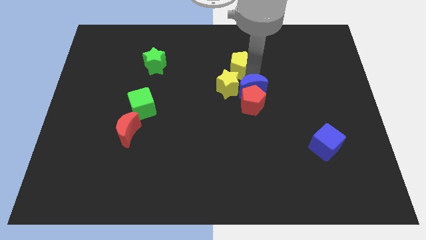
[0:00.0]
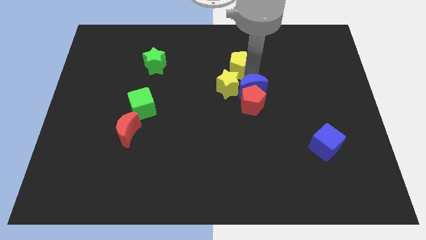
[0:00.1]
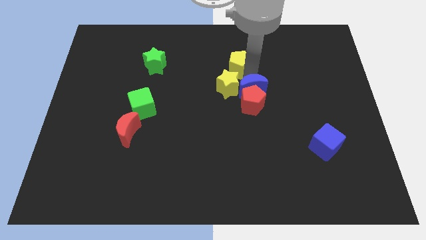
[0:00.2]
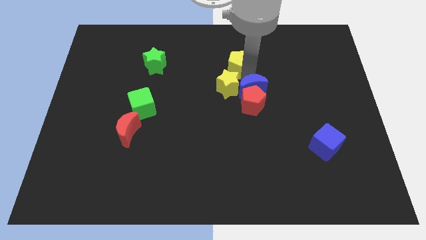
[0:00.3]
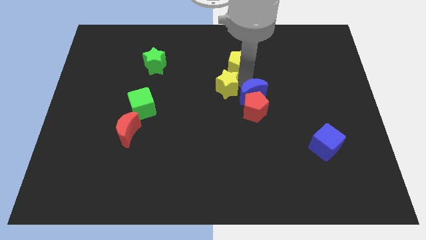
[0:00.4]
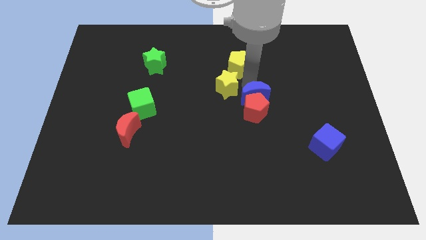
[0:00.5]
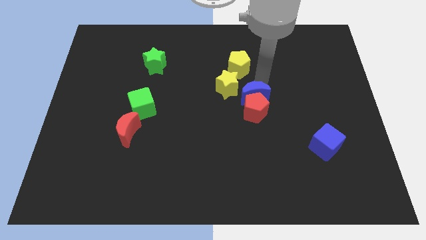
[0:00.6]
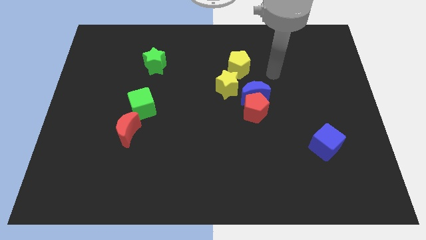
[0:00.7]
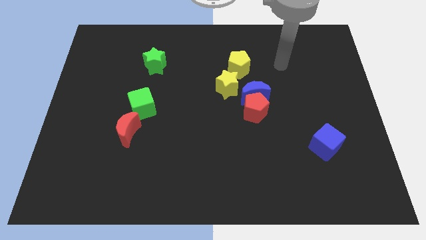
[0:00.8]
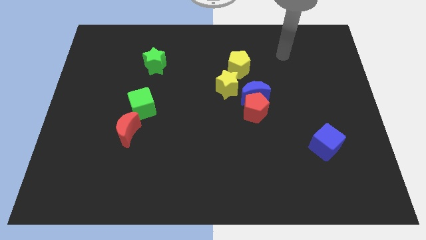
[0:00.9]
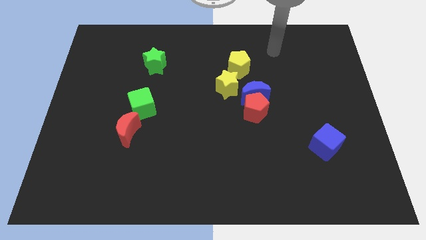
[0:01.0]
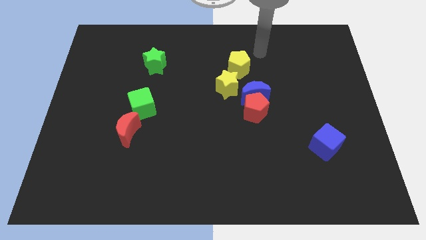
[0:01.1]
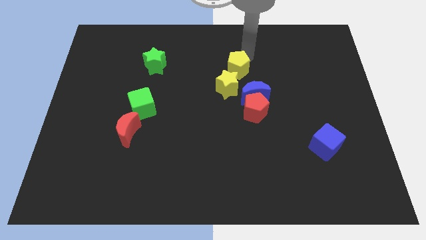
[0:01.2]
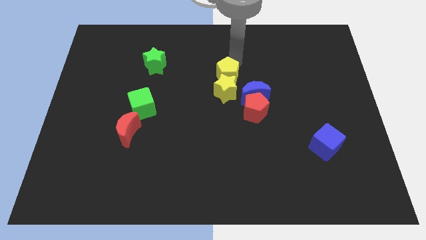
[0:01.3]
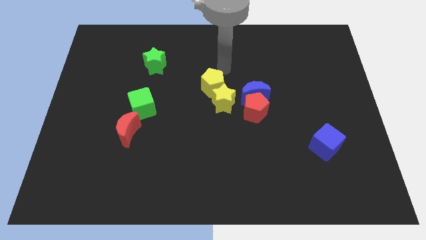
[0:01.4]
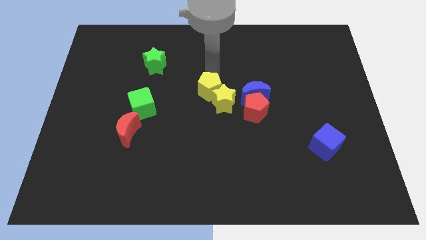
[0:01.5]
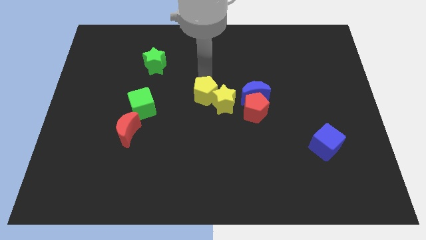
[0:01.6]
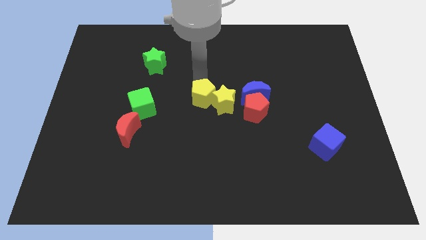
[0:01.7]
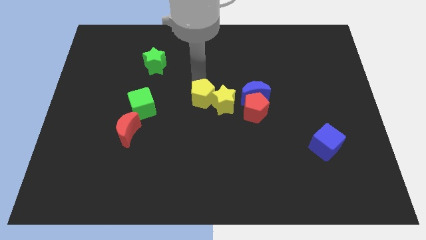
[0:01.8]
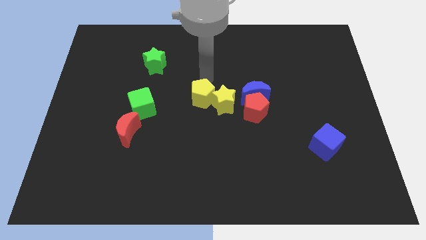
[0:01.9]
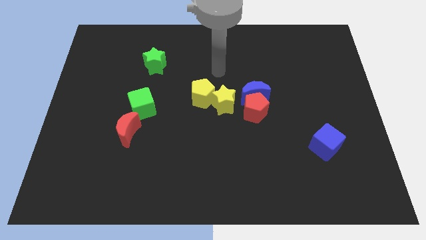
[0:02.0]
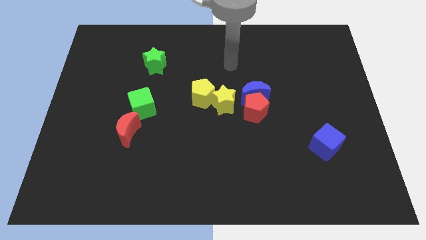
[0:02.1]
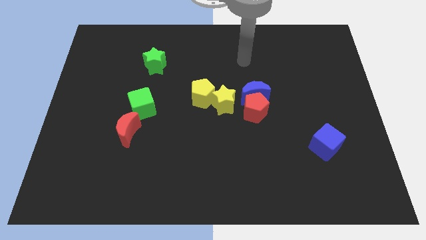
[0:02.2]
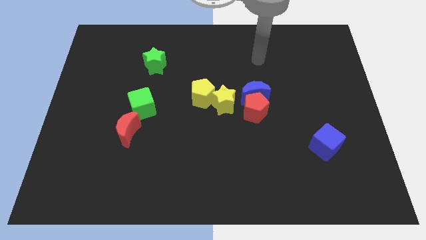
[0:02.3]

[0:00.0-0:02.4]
move the yellow blocks towards the center of the board

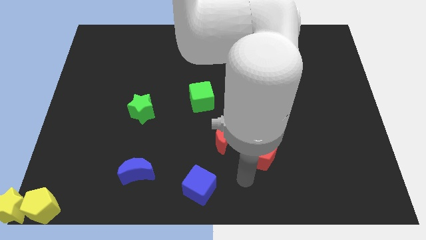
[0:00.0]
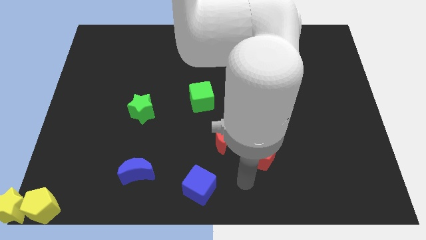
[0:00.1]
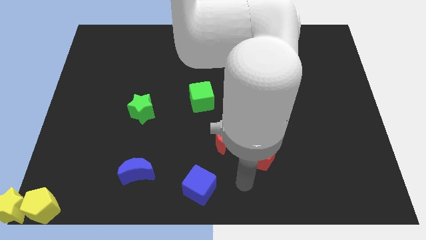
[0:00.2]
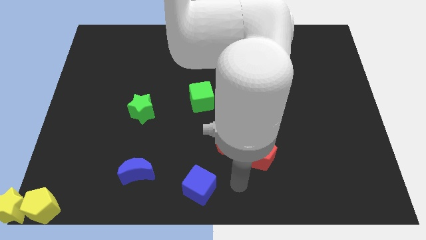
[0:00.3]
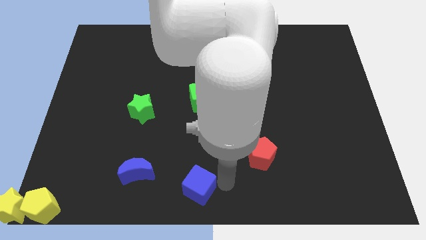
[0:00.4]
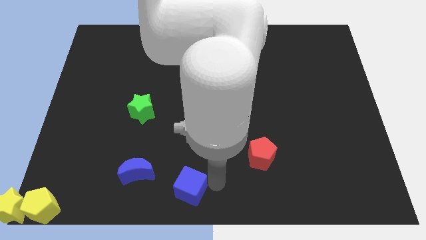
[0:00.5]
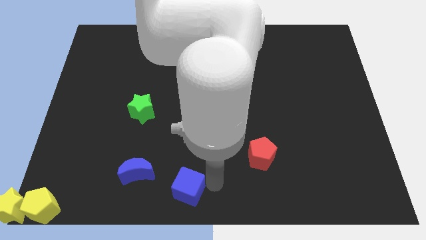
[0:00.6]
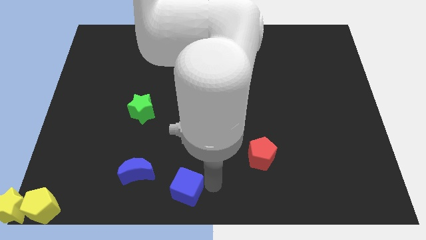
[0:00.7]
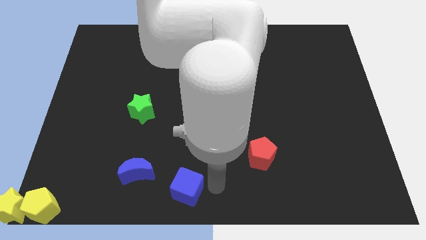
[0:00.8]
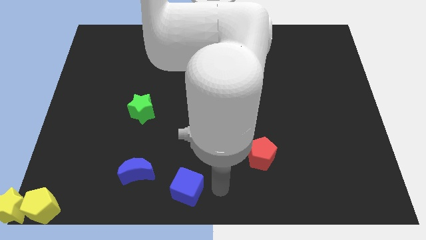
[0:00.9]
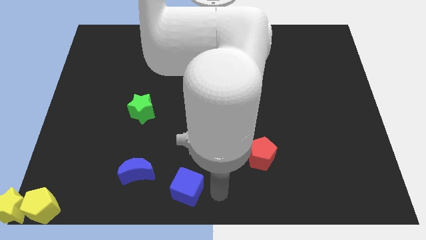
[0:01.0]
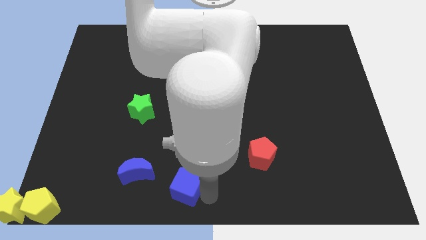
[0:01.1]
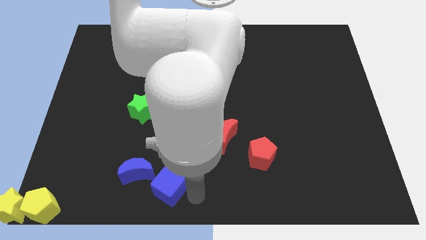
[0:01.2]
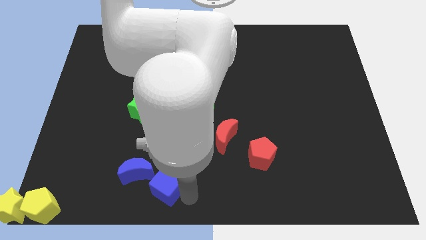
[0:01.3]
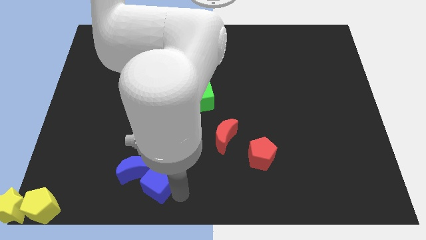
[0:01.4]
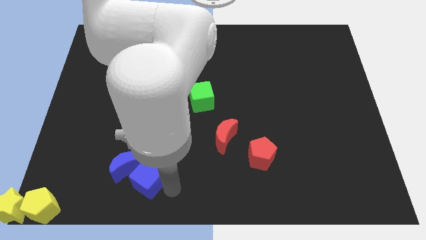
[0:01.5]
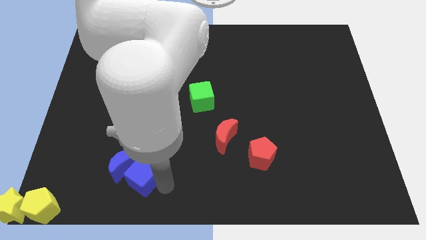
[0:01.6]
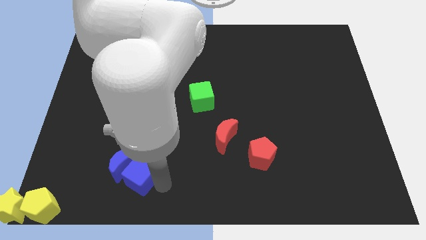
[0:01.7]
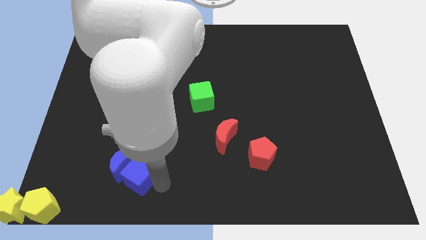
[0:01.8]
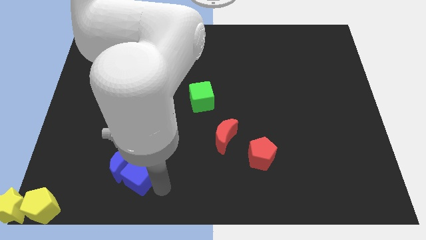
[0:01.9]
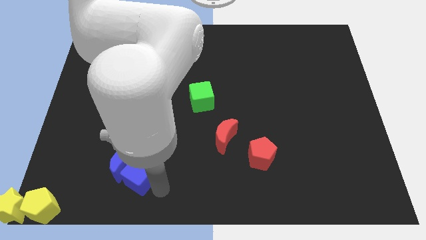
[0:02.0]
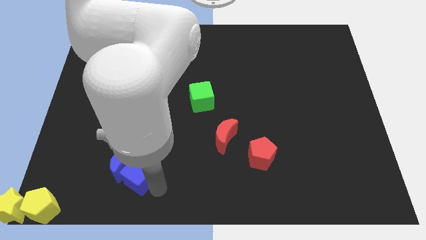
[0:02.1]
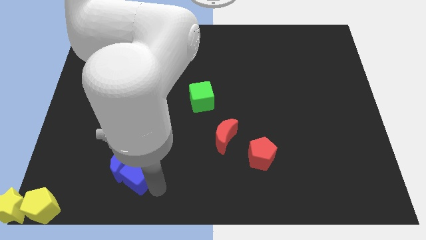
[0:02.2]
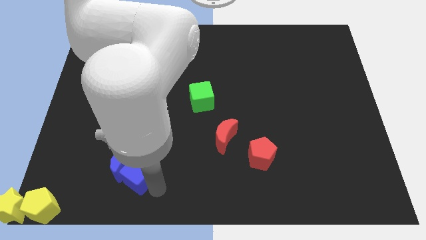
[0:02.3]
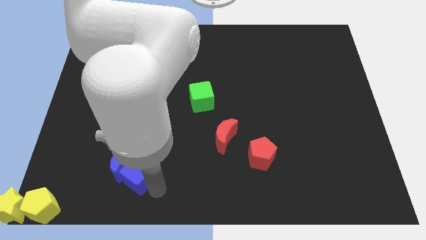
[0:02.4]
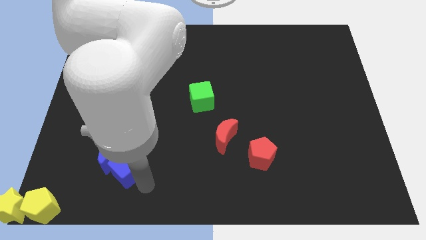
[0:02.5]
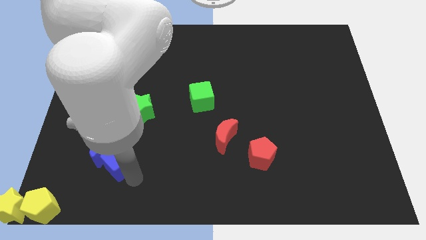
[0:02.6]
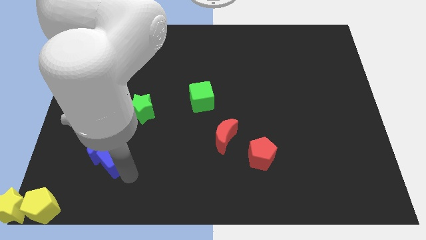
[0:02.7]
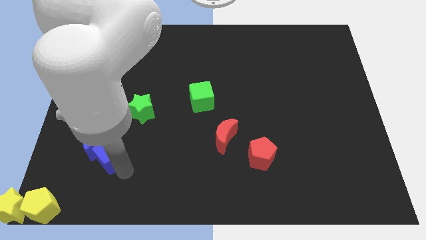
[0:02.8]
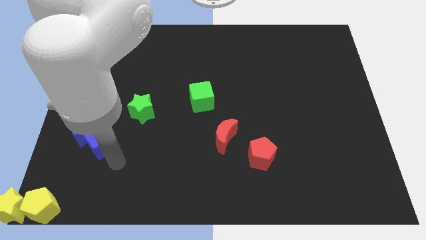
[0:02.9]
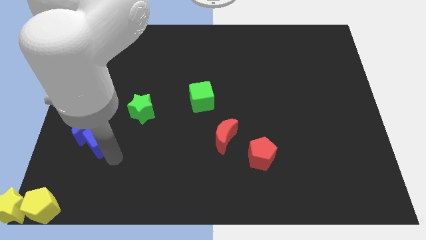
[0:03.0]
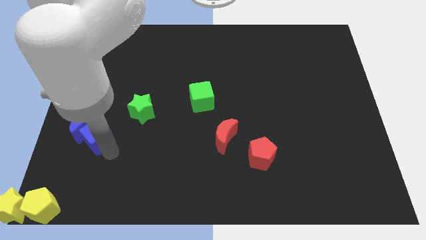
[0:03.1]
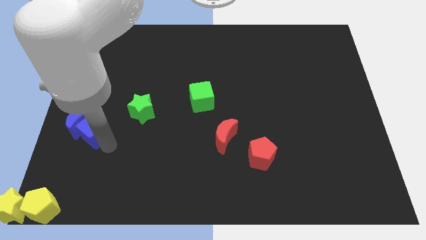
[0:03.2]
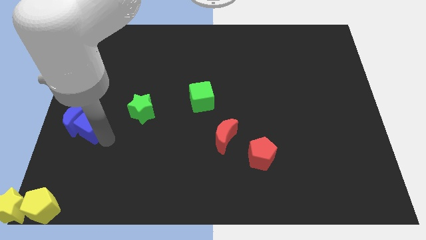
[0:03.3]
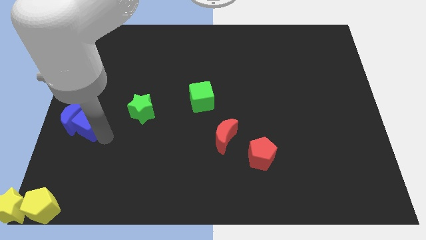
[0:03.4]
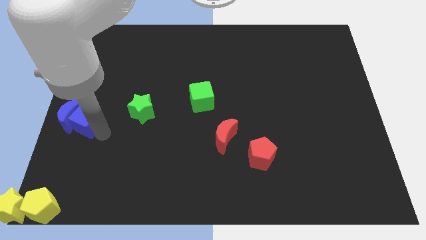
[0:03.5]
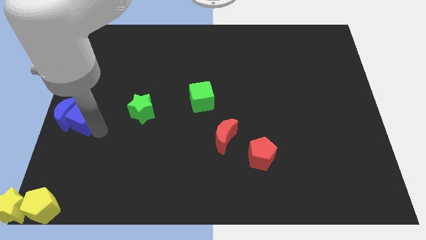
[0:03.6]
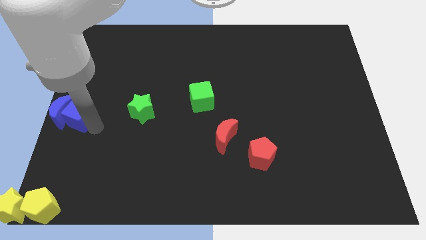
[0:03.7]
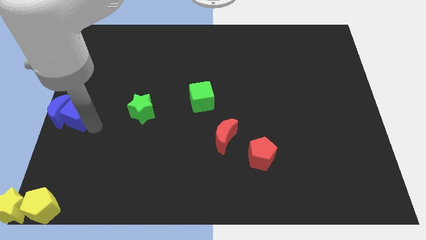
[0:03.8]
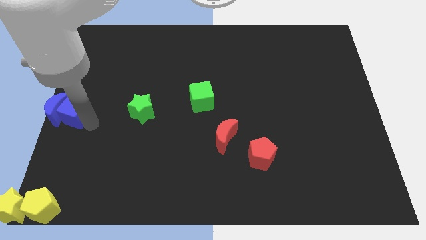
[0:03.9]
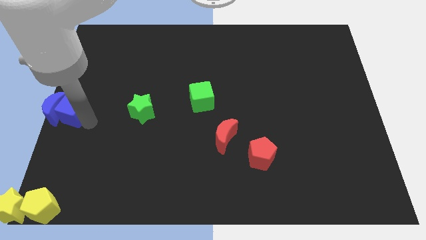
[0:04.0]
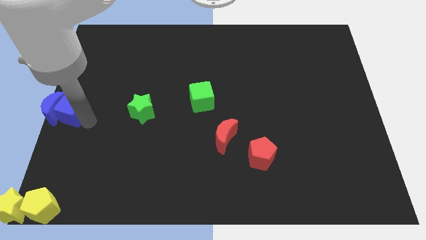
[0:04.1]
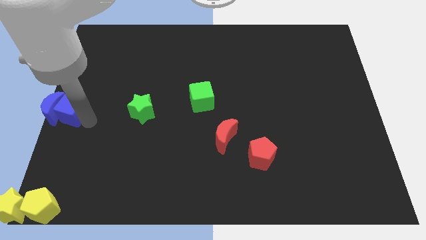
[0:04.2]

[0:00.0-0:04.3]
push the blue blocks to the left of green star

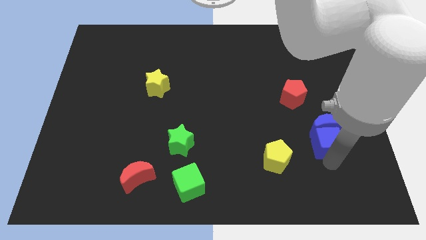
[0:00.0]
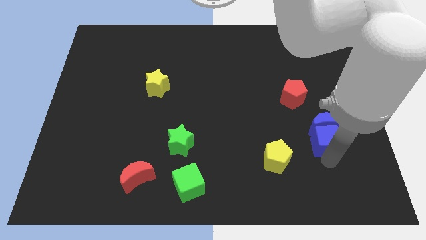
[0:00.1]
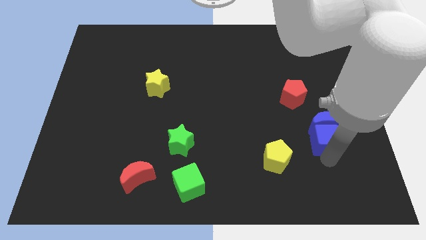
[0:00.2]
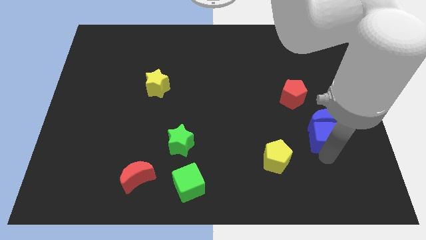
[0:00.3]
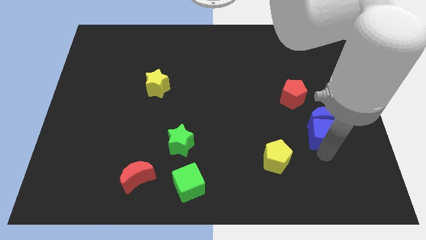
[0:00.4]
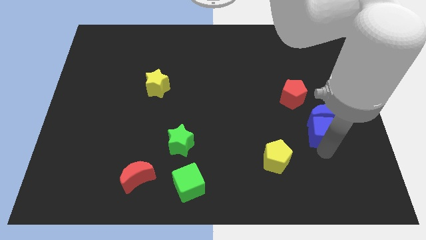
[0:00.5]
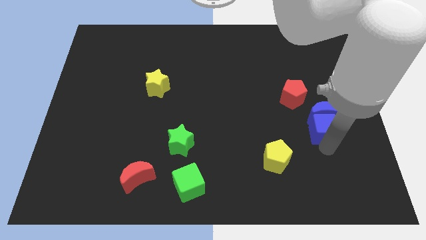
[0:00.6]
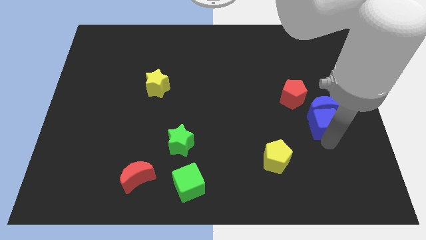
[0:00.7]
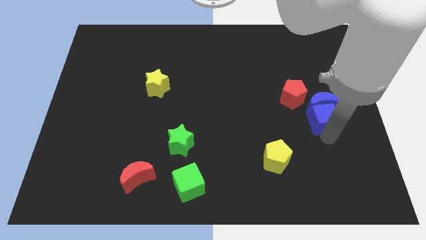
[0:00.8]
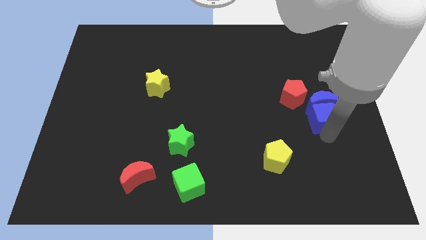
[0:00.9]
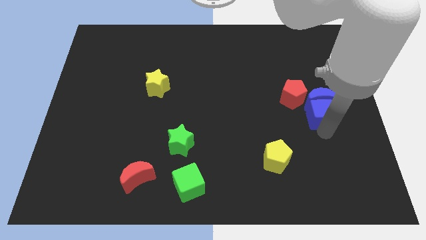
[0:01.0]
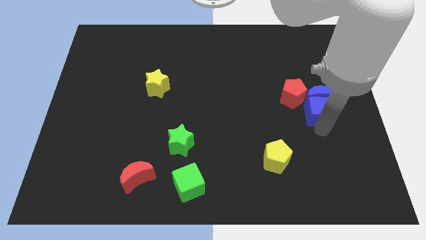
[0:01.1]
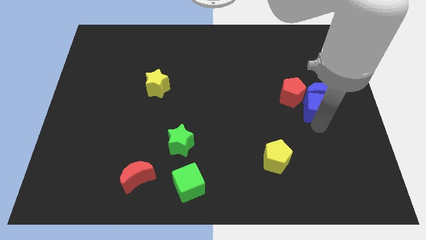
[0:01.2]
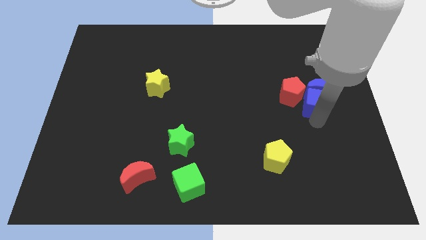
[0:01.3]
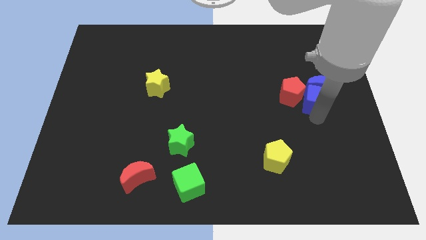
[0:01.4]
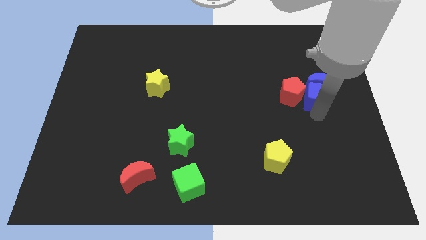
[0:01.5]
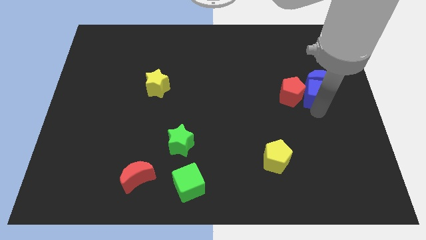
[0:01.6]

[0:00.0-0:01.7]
slide the blue blocks towards the top side of the board

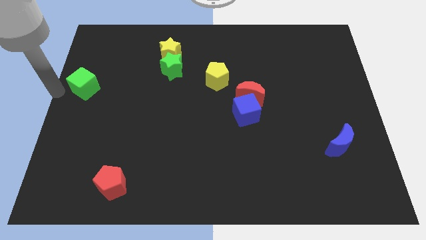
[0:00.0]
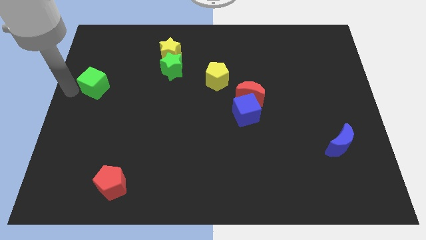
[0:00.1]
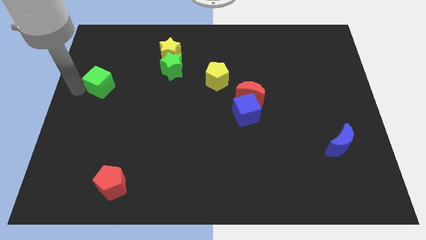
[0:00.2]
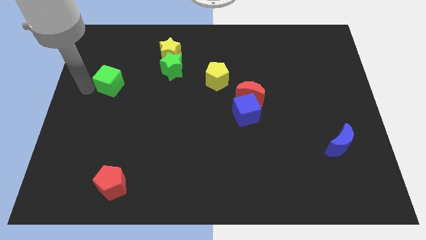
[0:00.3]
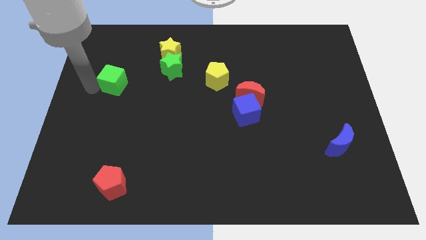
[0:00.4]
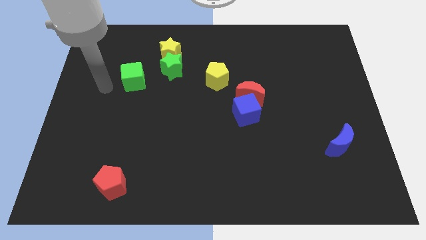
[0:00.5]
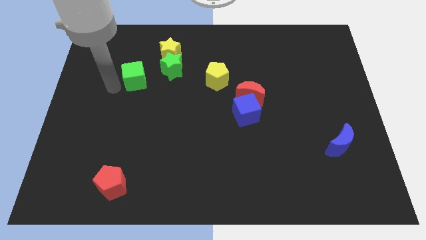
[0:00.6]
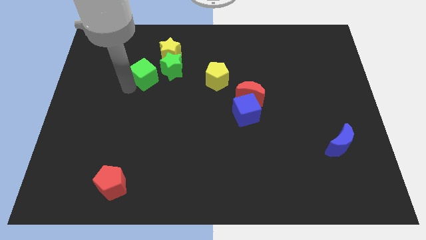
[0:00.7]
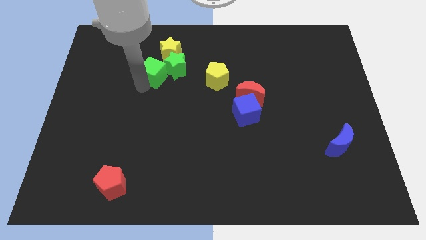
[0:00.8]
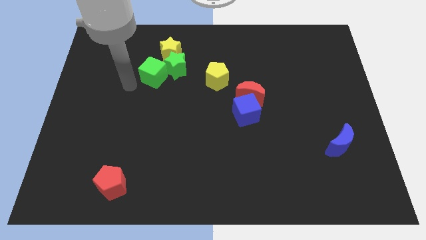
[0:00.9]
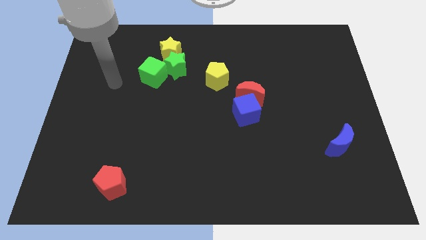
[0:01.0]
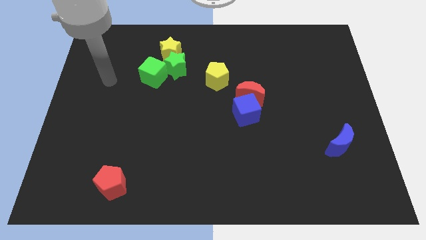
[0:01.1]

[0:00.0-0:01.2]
add green cube into green star
